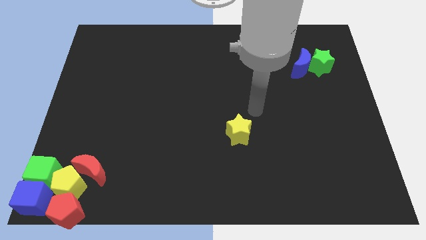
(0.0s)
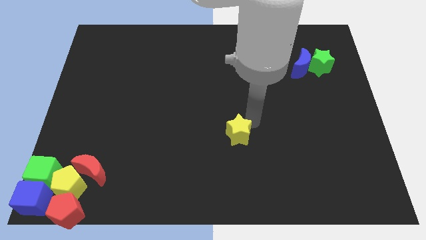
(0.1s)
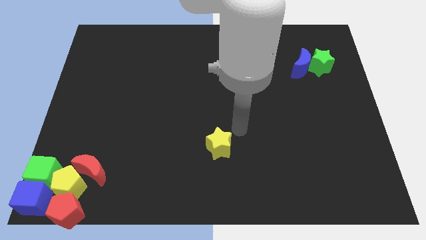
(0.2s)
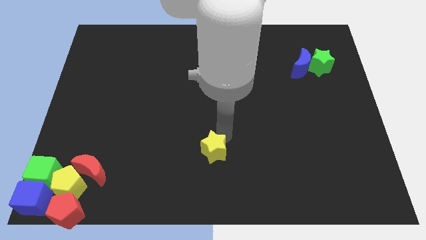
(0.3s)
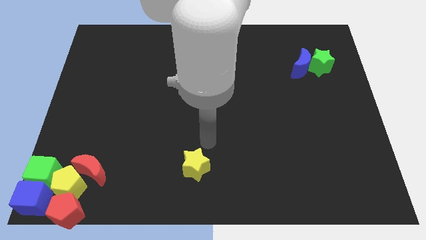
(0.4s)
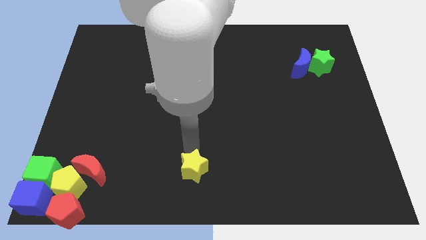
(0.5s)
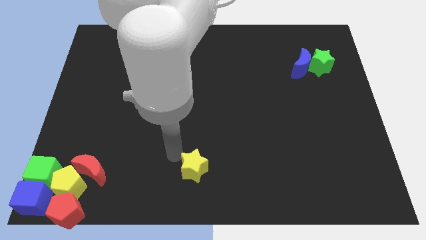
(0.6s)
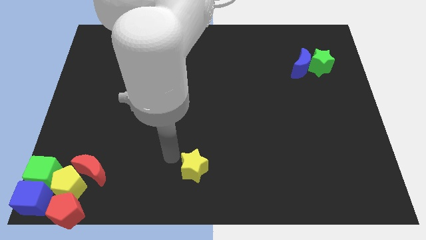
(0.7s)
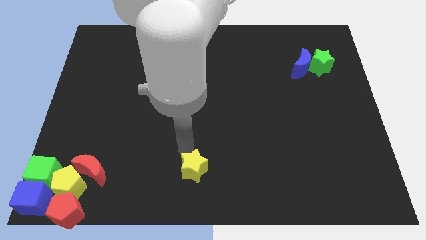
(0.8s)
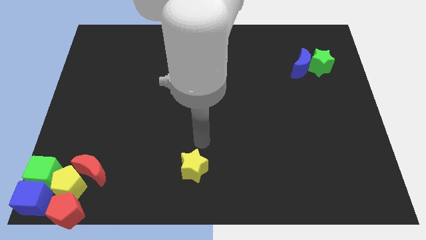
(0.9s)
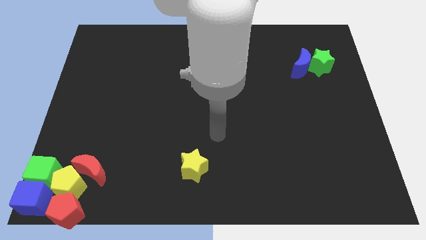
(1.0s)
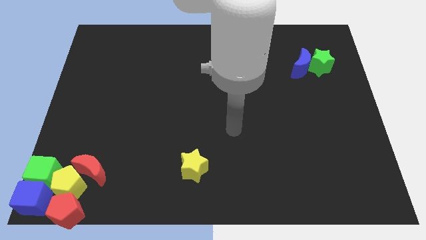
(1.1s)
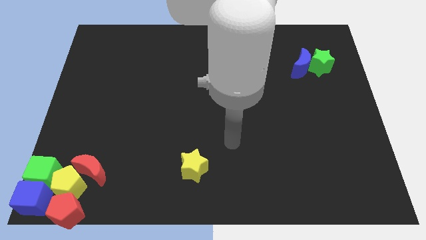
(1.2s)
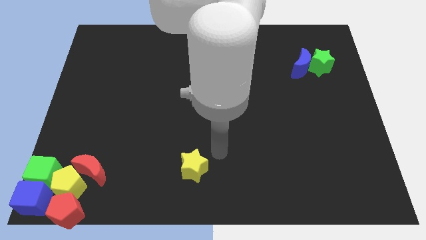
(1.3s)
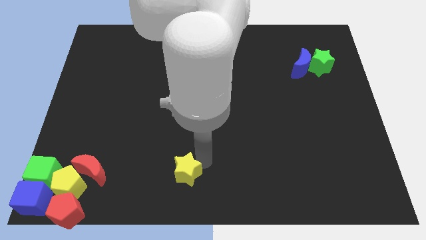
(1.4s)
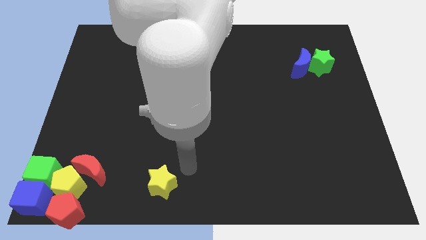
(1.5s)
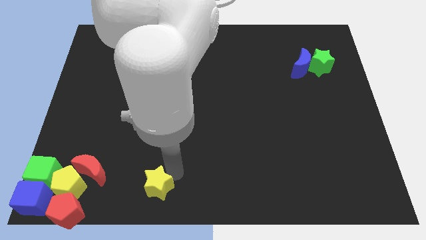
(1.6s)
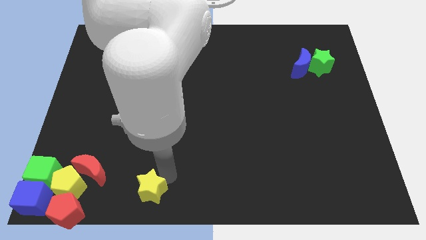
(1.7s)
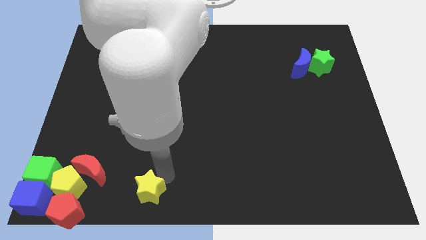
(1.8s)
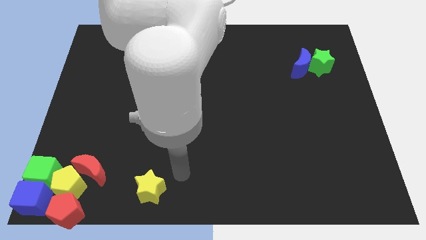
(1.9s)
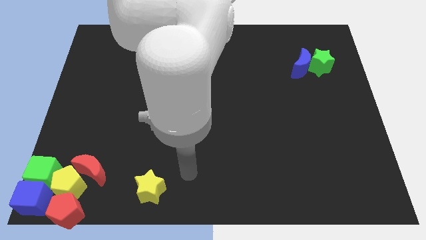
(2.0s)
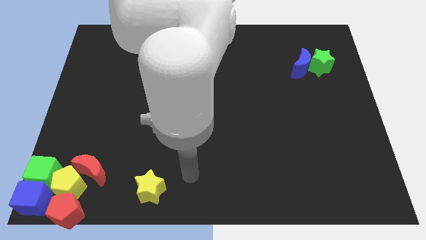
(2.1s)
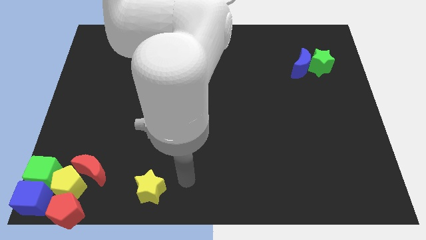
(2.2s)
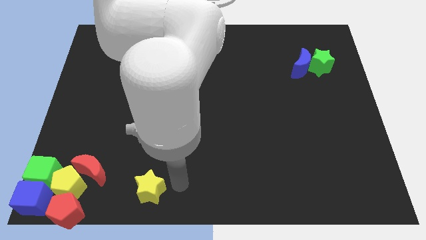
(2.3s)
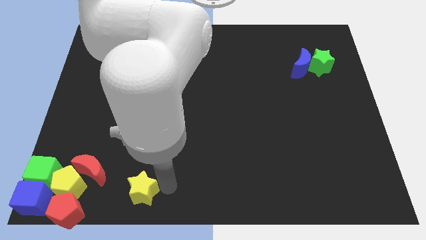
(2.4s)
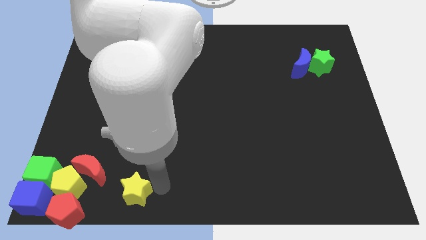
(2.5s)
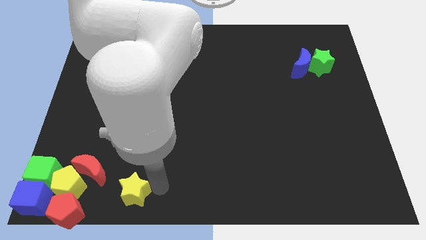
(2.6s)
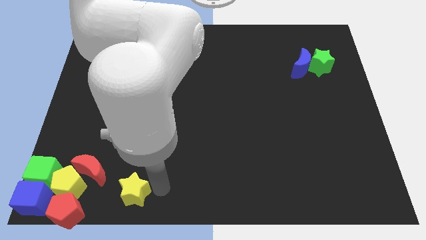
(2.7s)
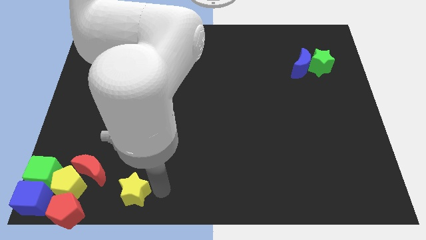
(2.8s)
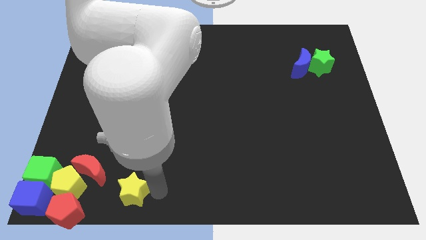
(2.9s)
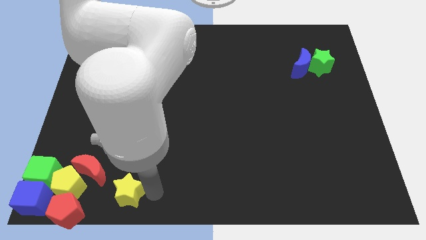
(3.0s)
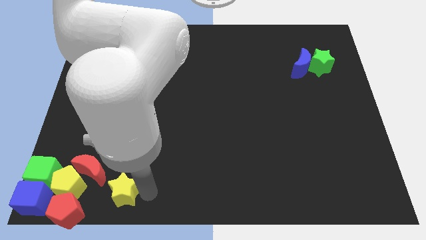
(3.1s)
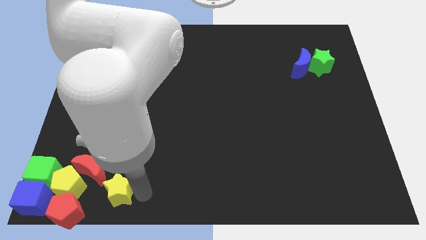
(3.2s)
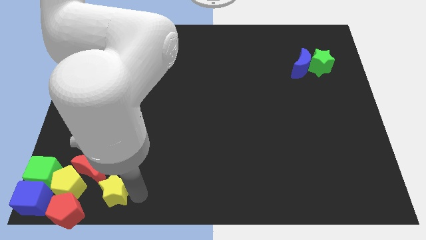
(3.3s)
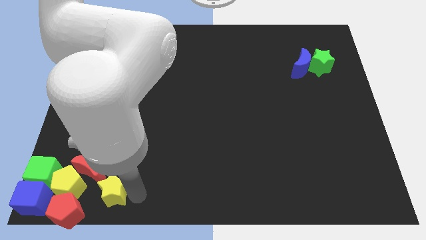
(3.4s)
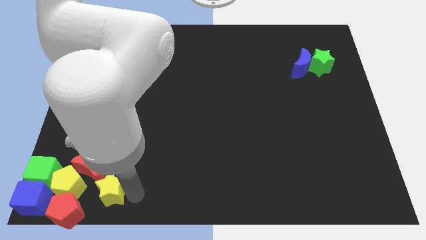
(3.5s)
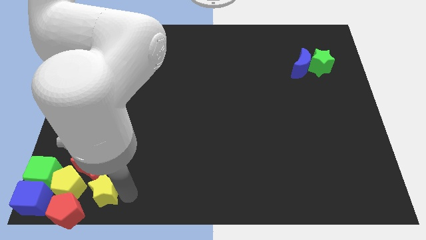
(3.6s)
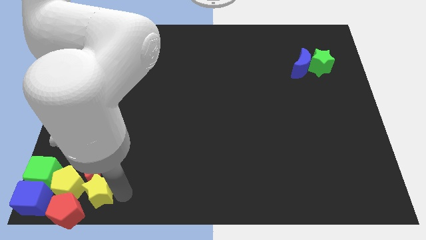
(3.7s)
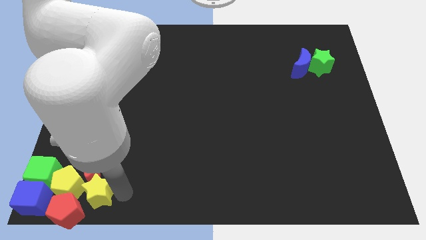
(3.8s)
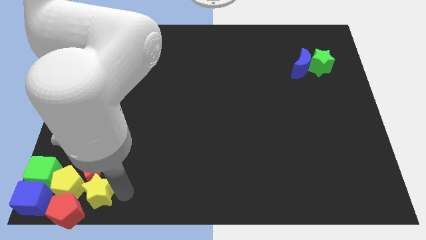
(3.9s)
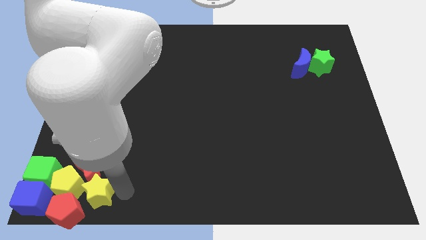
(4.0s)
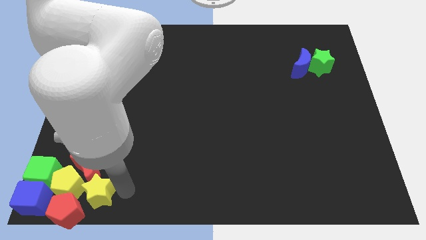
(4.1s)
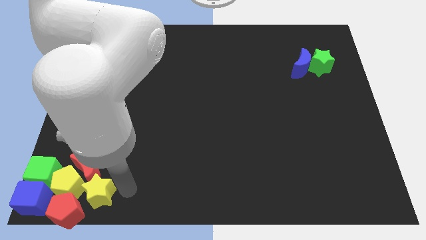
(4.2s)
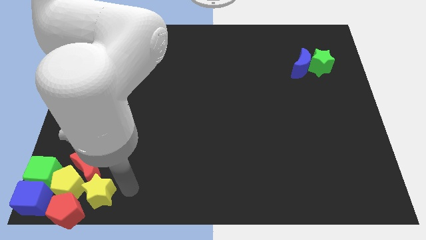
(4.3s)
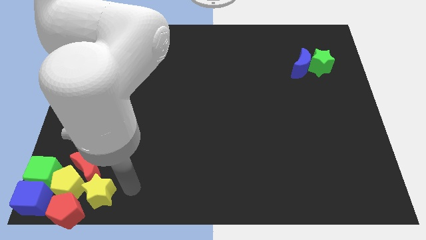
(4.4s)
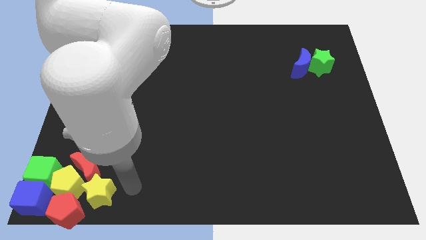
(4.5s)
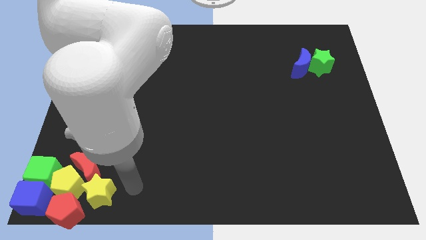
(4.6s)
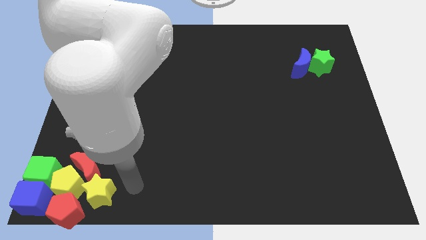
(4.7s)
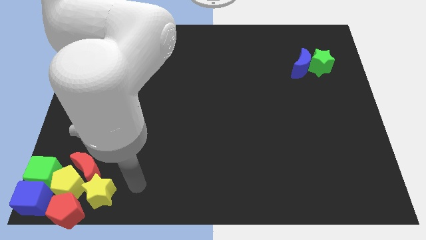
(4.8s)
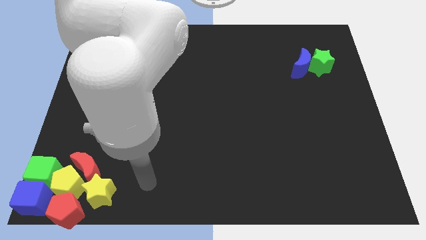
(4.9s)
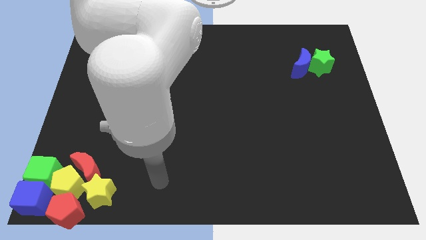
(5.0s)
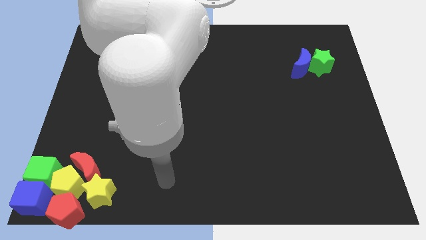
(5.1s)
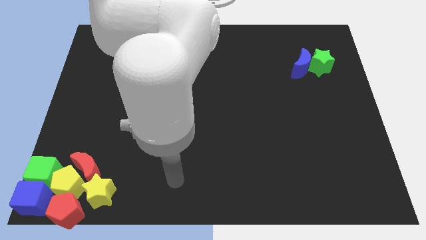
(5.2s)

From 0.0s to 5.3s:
move the yellow star to the right of the yellow pentagon

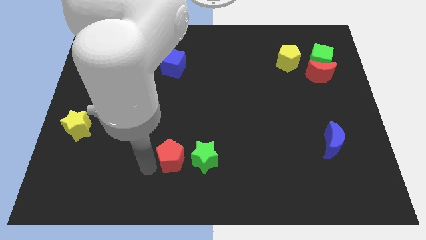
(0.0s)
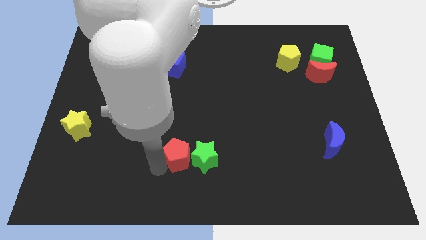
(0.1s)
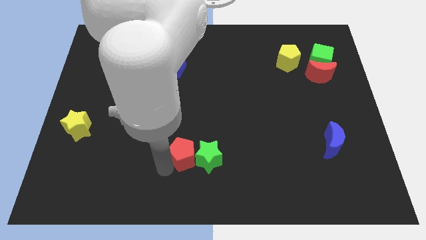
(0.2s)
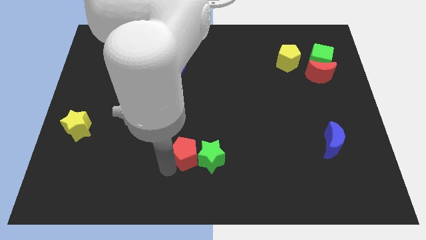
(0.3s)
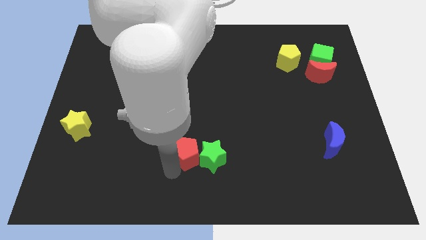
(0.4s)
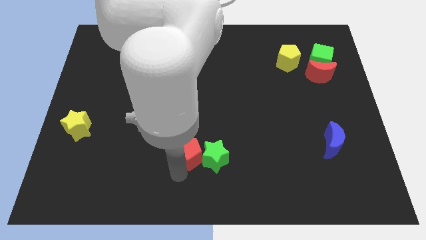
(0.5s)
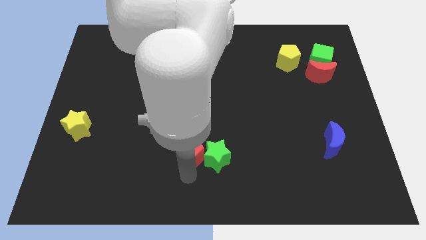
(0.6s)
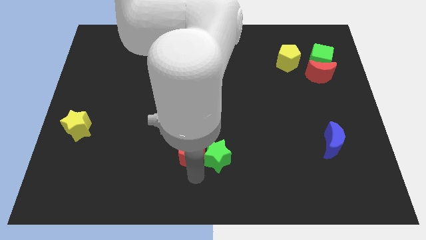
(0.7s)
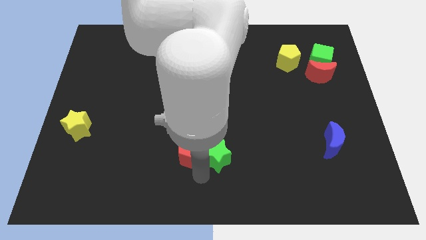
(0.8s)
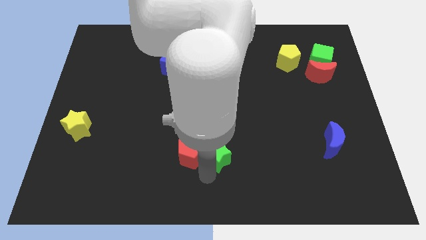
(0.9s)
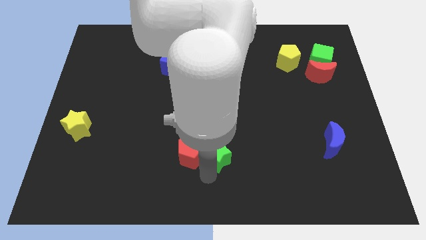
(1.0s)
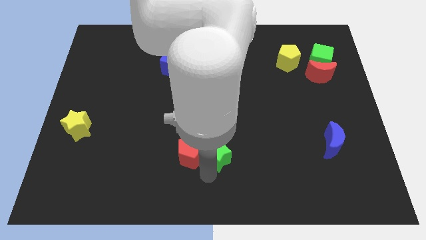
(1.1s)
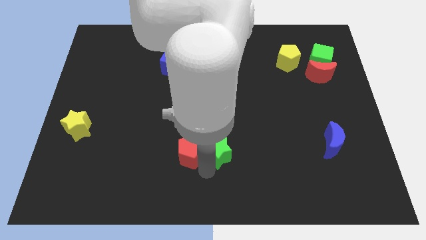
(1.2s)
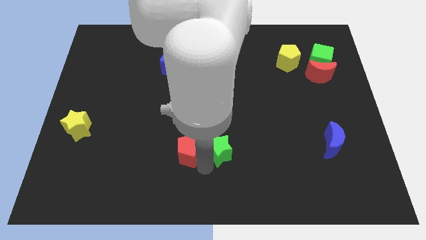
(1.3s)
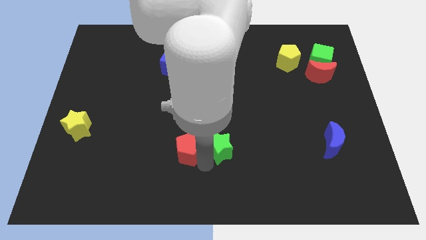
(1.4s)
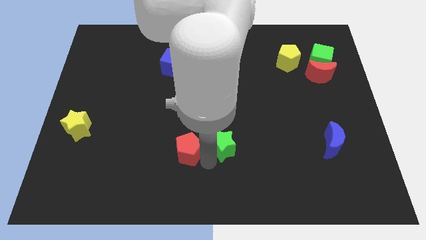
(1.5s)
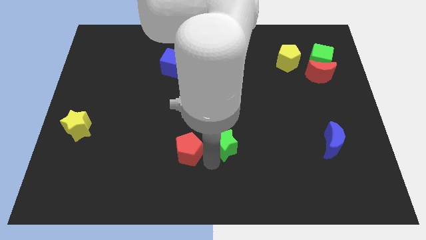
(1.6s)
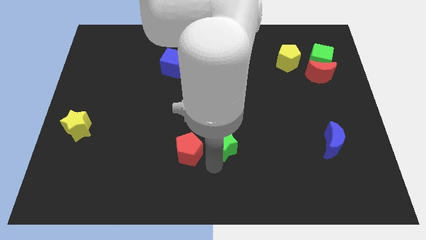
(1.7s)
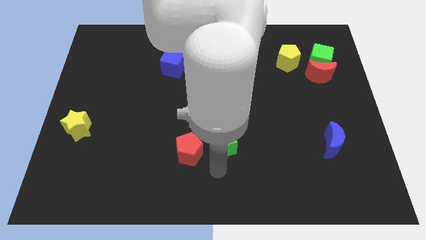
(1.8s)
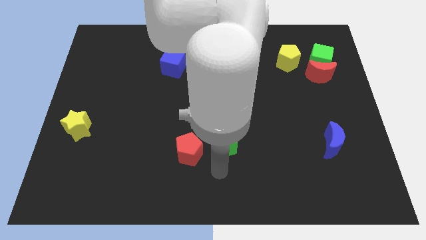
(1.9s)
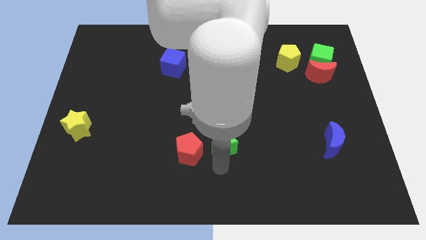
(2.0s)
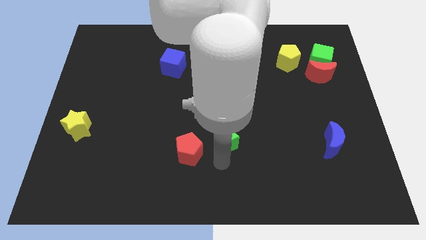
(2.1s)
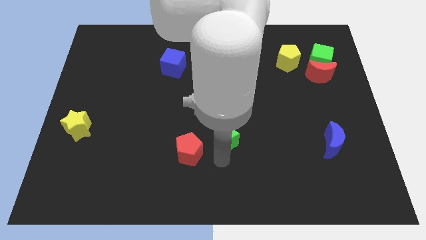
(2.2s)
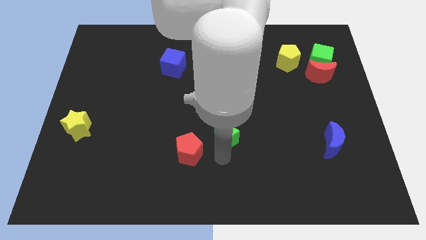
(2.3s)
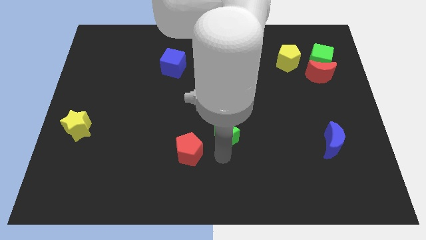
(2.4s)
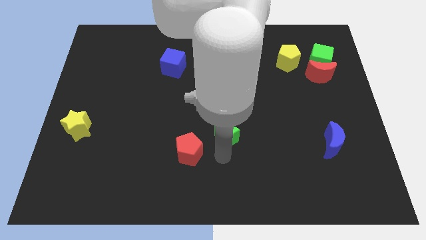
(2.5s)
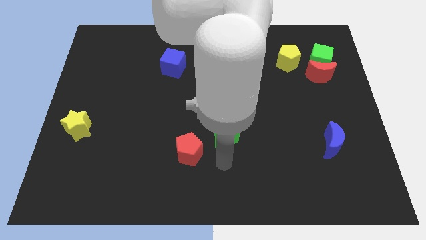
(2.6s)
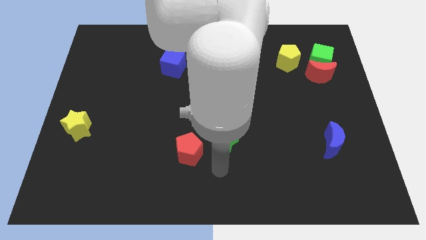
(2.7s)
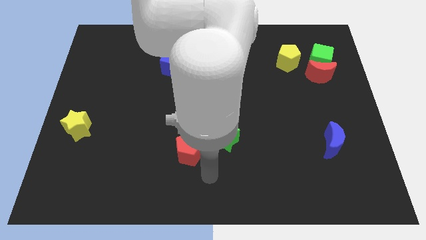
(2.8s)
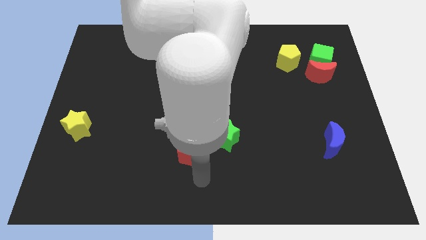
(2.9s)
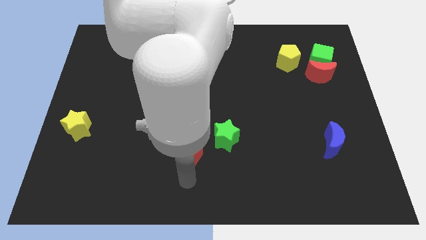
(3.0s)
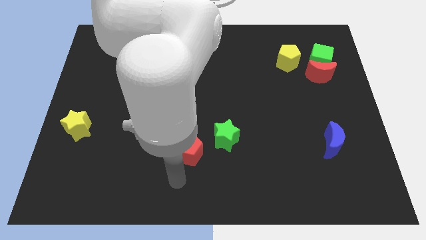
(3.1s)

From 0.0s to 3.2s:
move green star away from the red pentagon

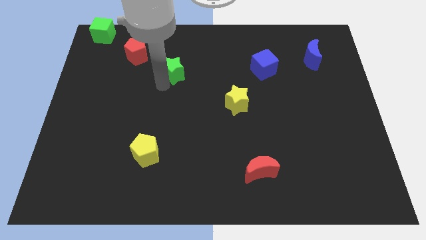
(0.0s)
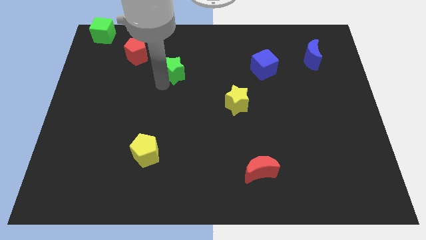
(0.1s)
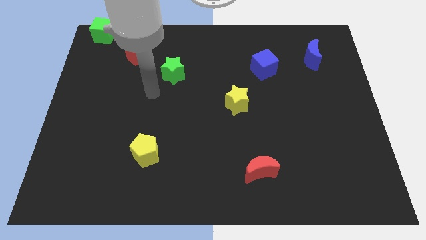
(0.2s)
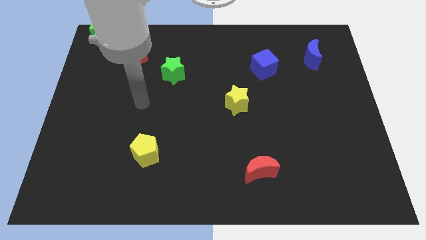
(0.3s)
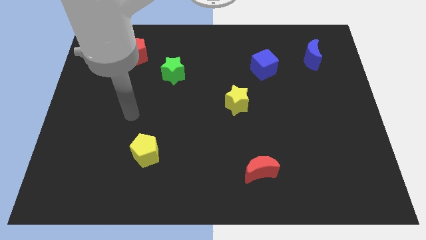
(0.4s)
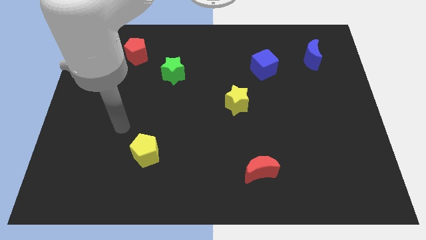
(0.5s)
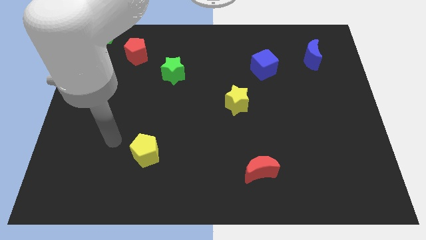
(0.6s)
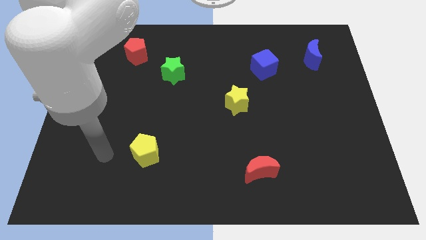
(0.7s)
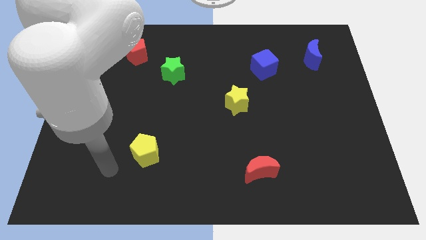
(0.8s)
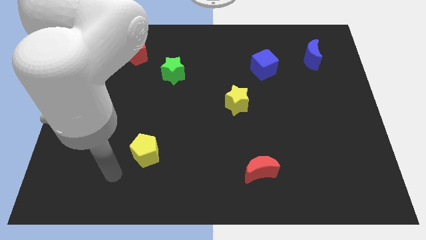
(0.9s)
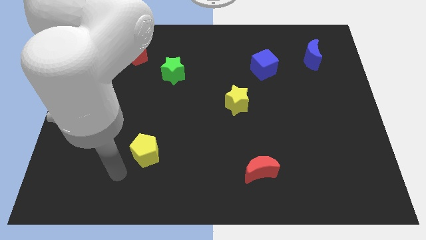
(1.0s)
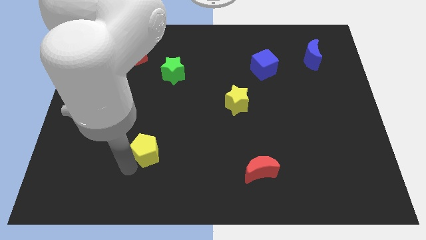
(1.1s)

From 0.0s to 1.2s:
move your arm close to the yellow pentagon
